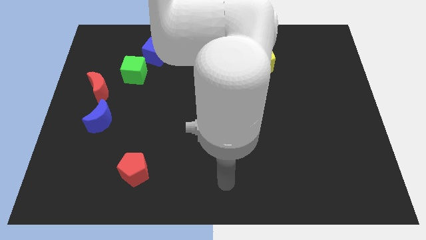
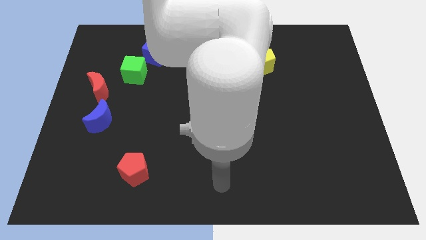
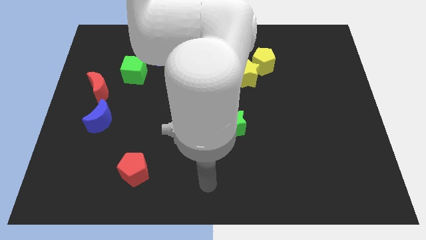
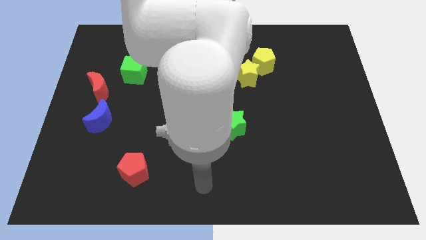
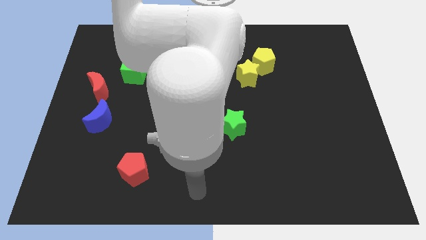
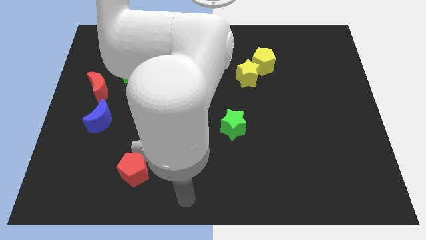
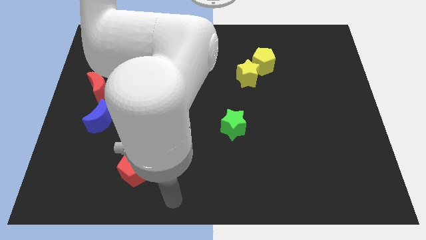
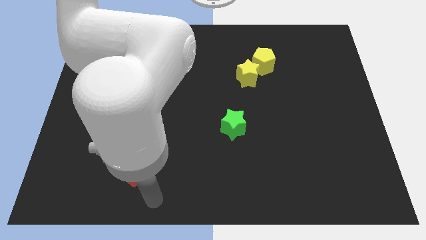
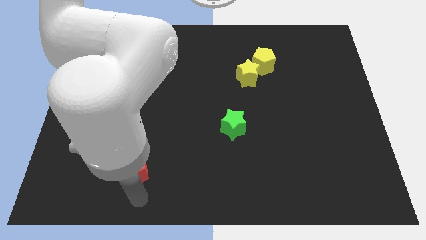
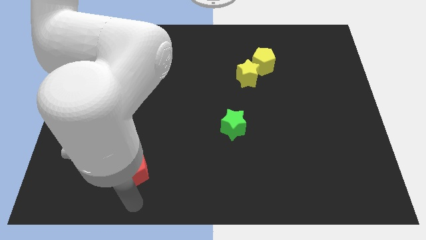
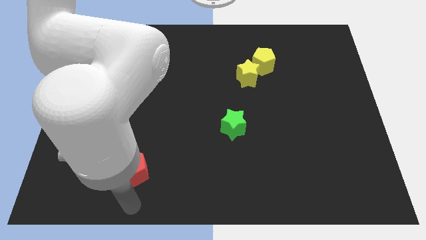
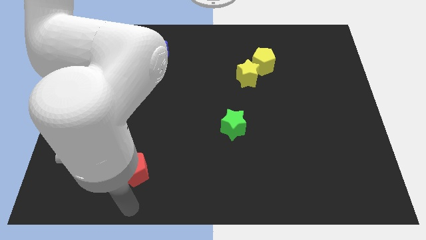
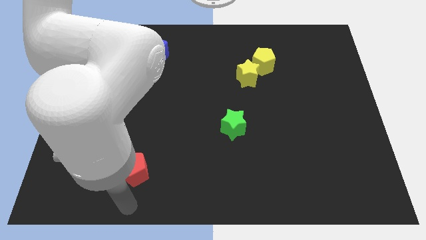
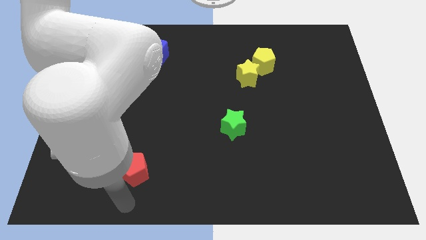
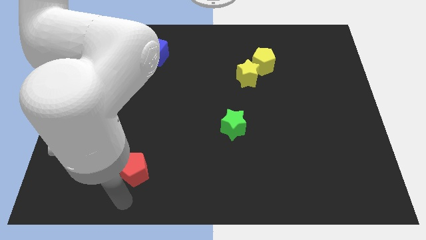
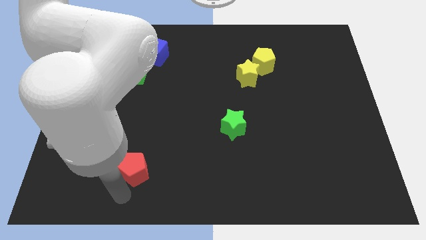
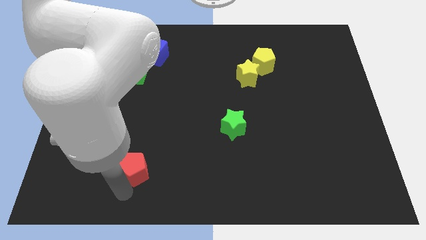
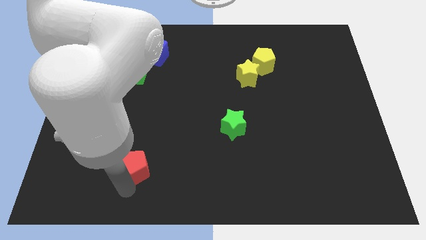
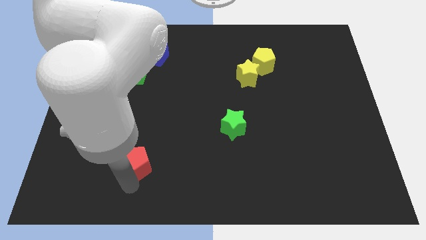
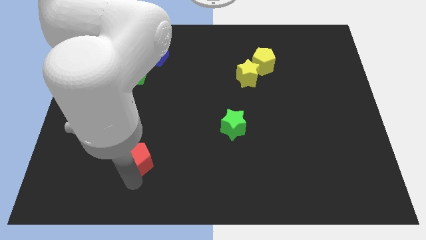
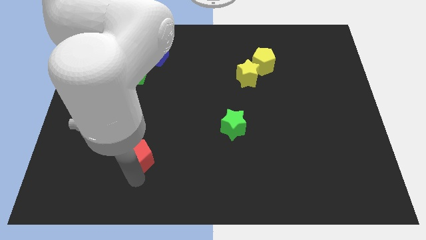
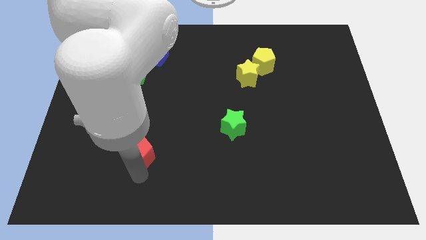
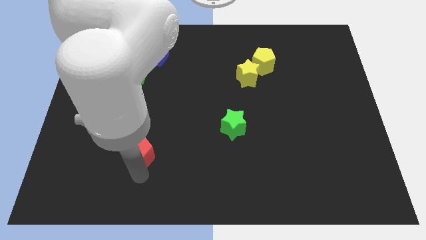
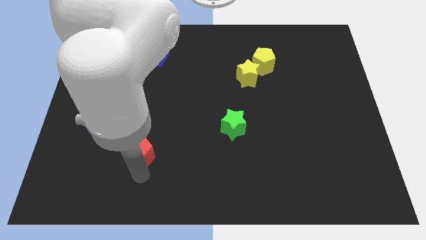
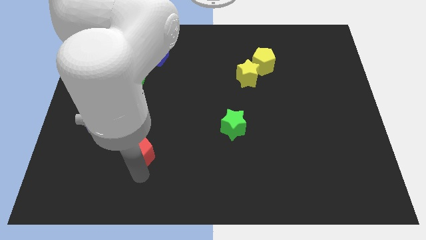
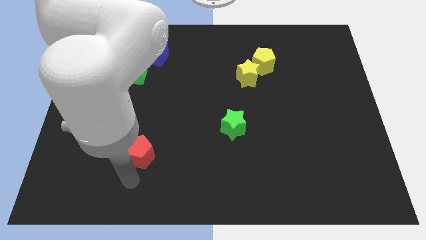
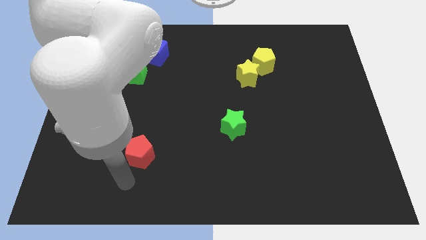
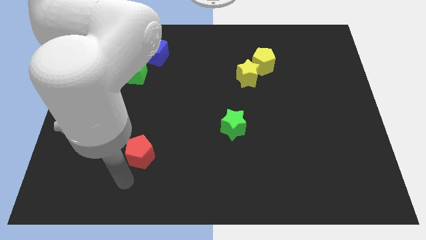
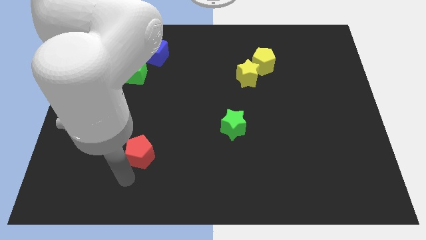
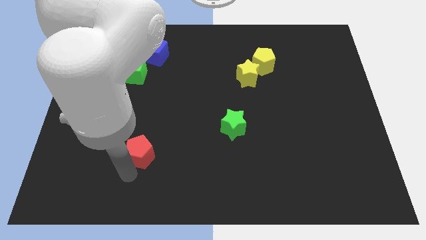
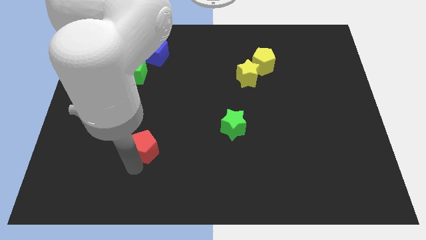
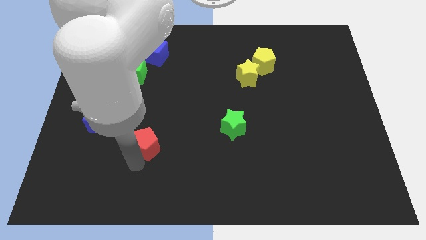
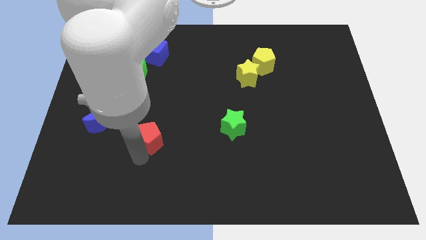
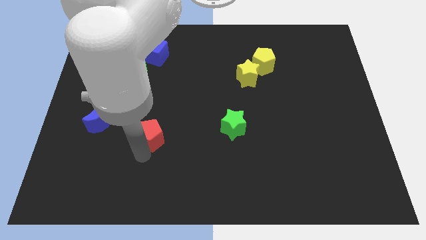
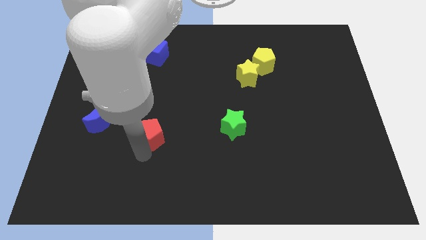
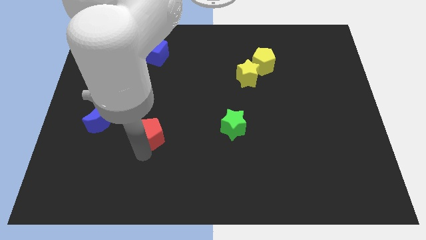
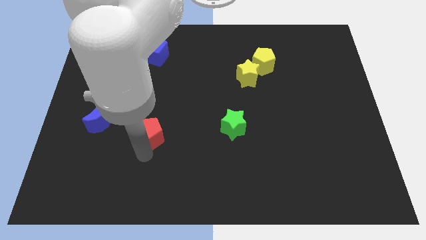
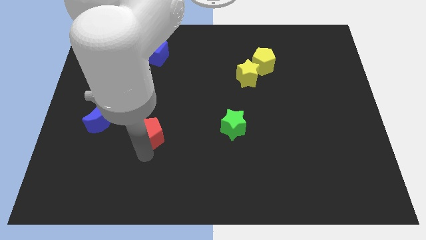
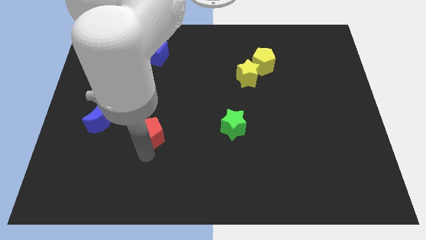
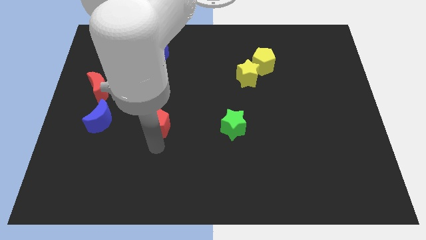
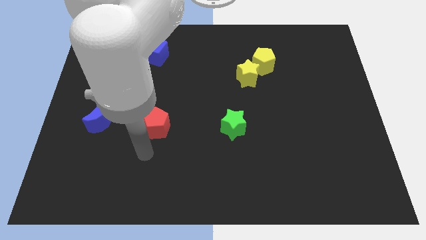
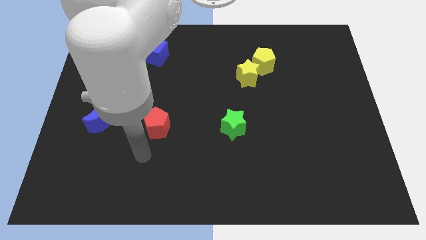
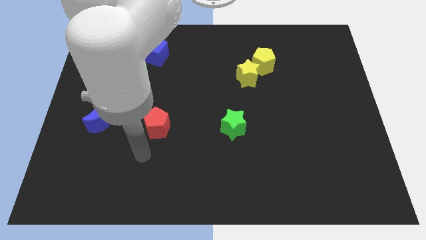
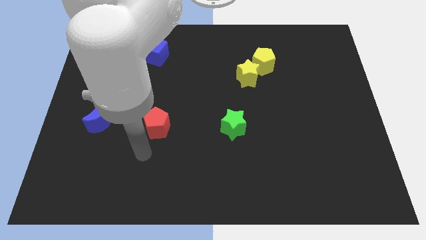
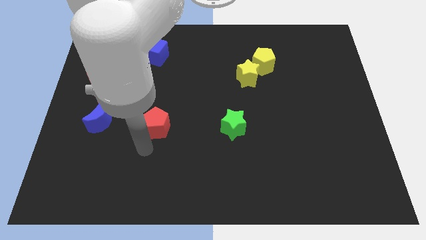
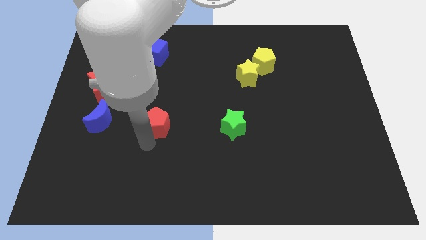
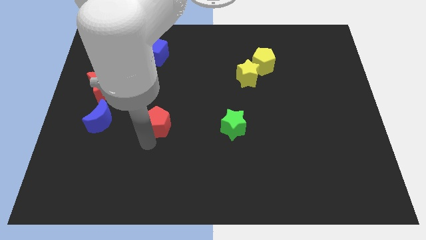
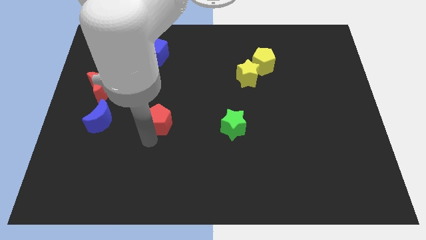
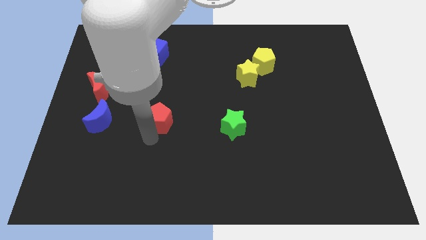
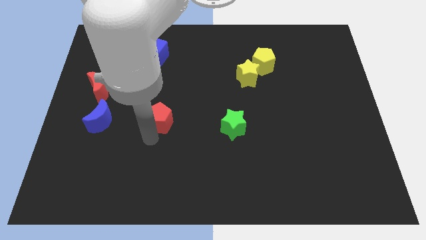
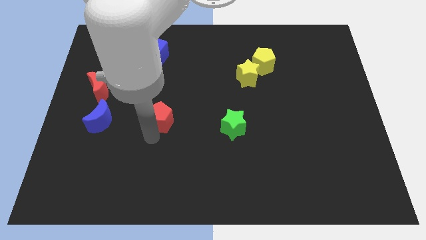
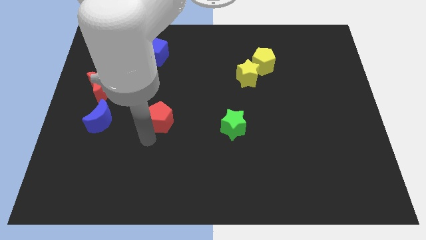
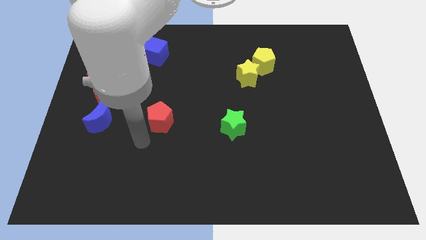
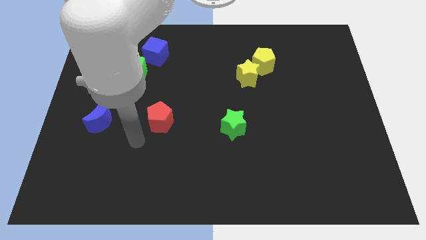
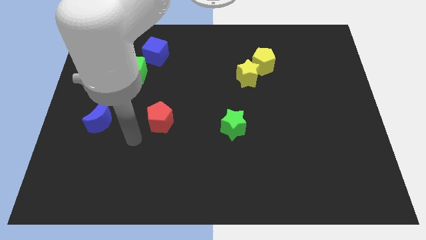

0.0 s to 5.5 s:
move the red pentagon horizontally right to the blue moon

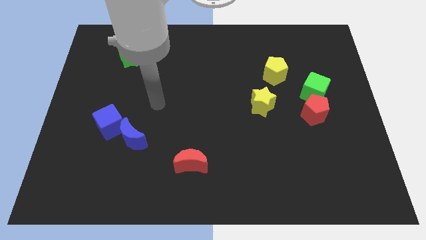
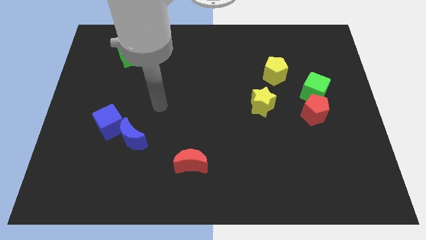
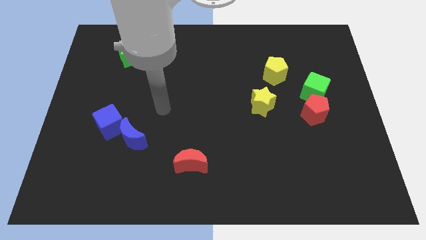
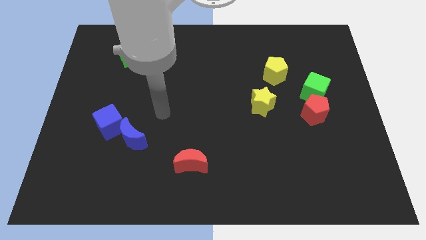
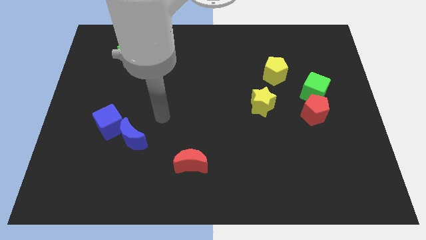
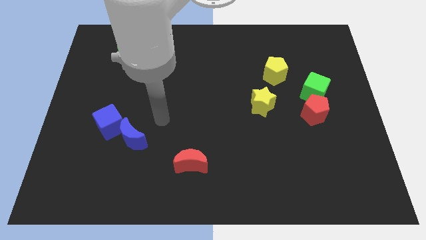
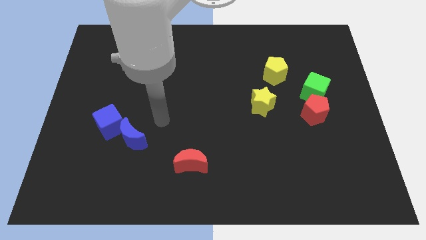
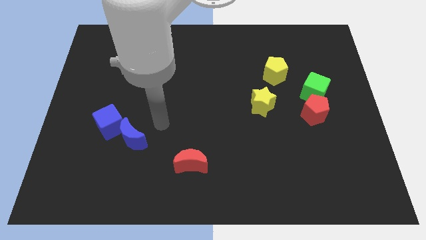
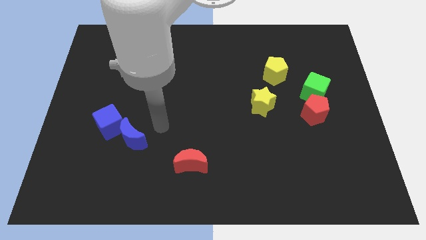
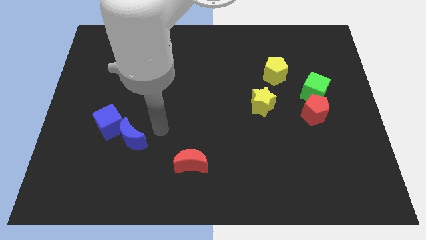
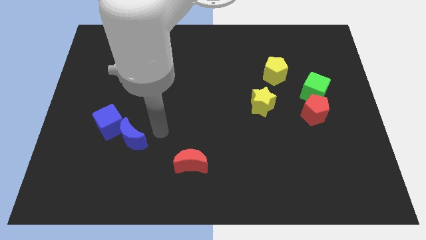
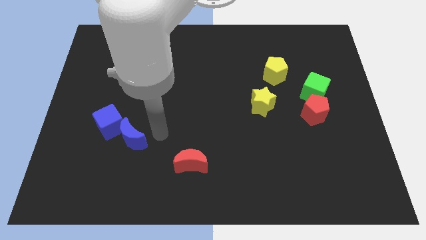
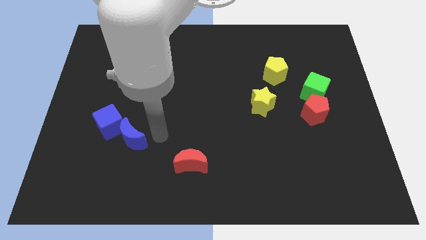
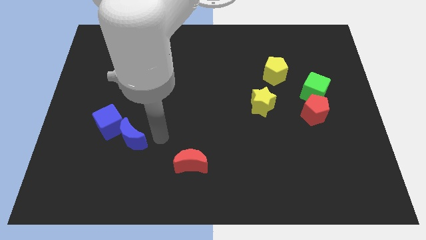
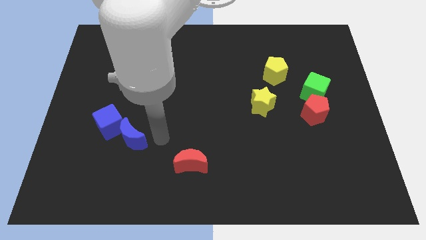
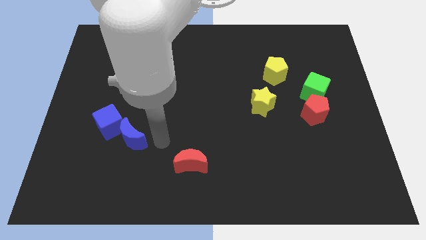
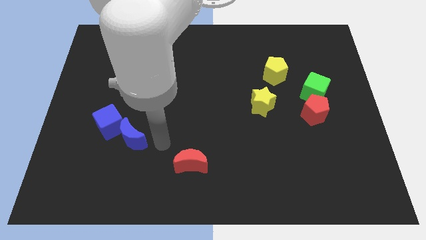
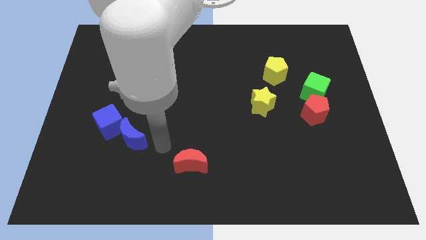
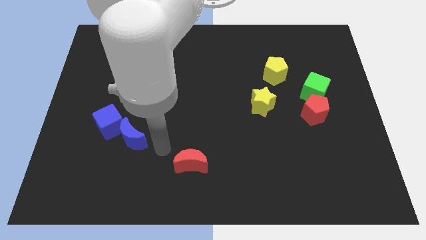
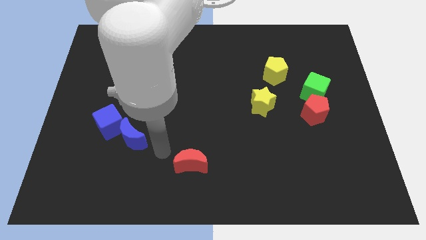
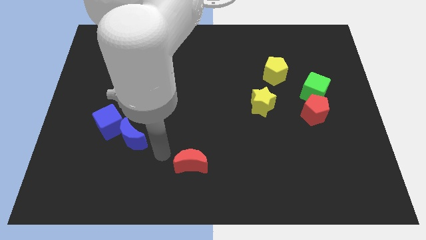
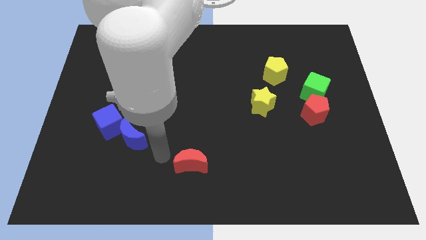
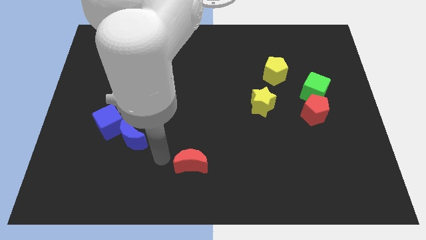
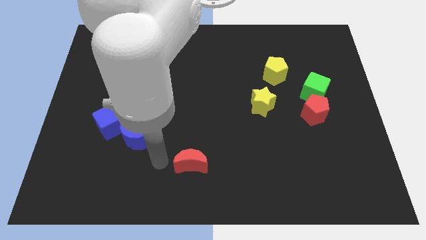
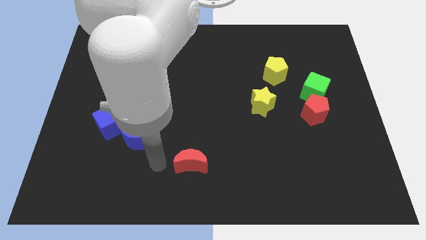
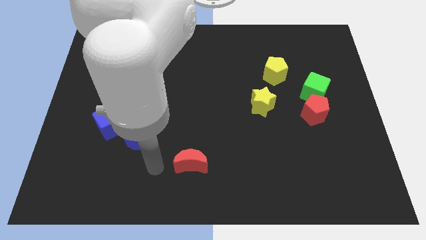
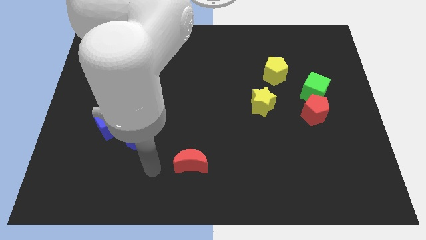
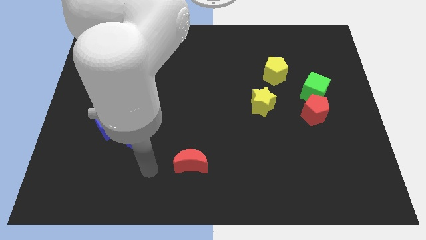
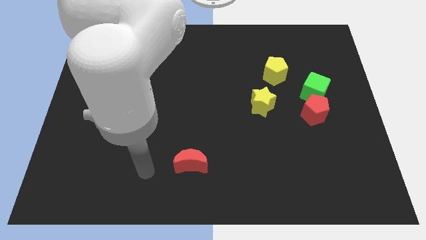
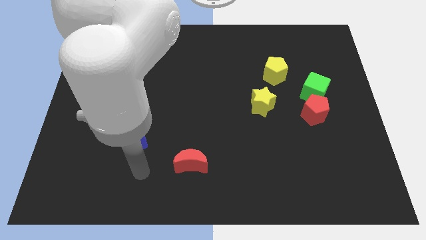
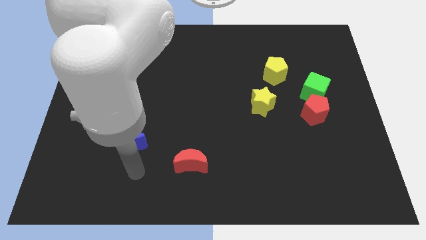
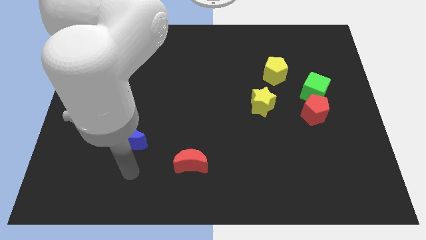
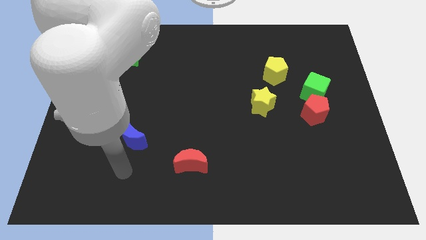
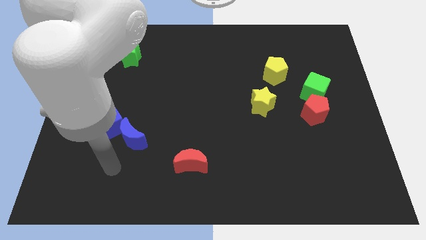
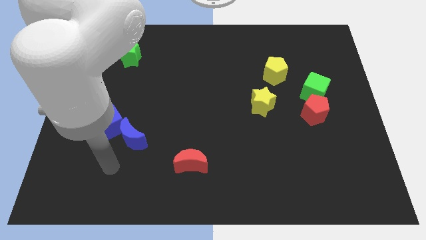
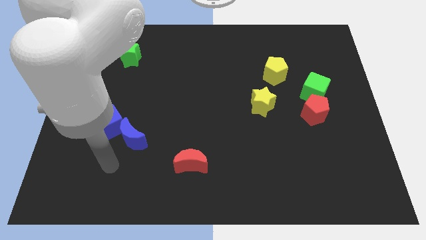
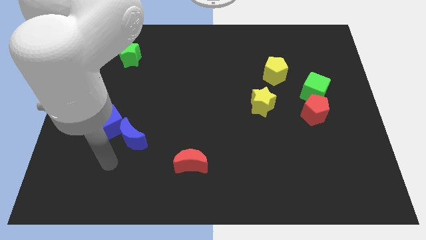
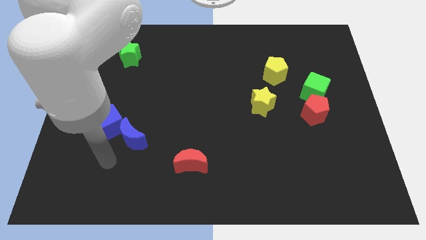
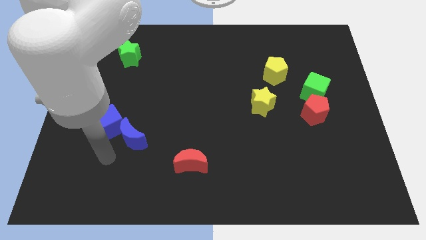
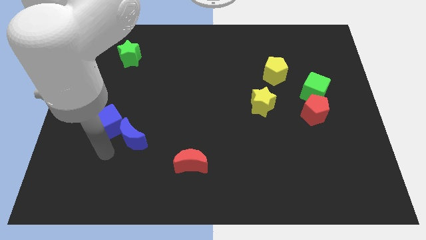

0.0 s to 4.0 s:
move arm near blue cube
